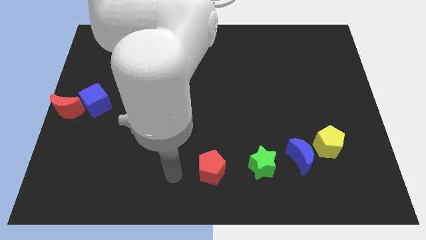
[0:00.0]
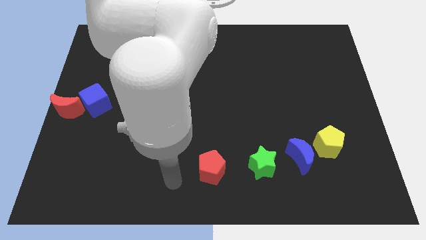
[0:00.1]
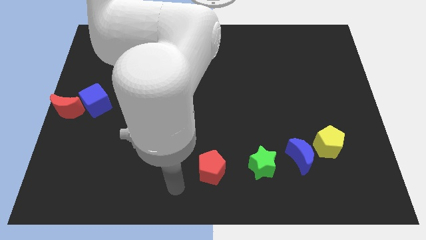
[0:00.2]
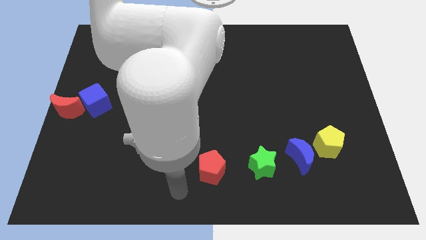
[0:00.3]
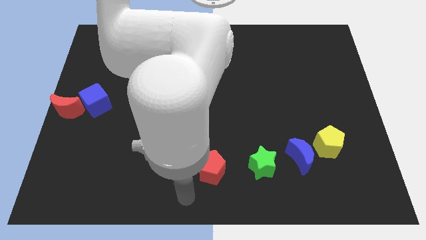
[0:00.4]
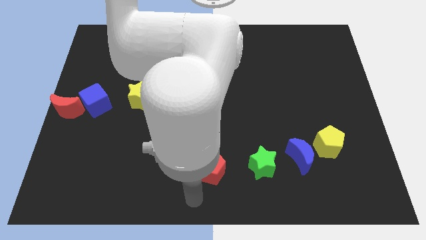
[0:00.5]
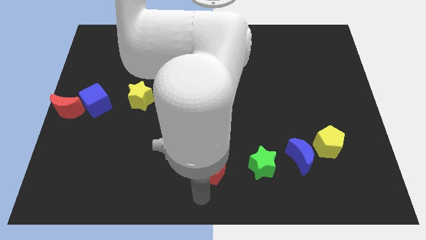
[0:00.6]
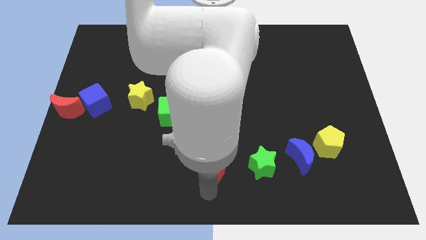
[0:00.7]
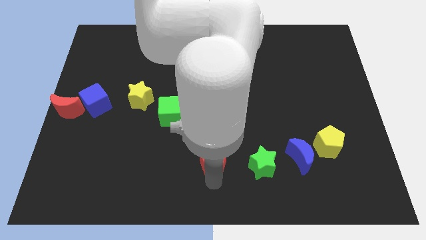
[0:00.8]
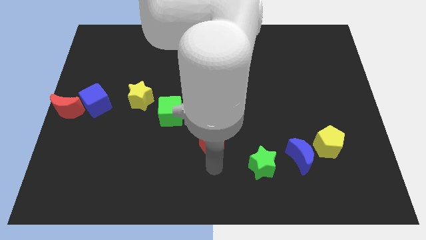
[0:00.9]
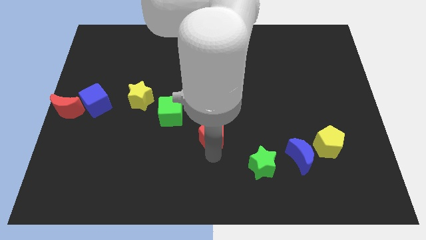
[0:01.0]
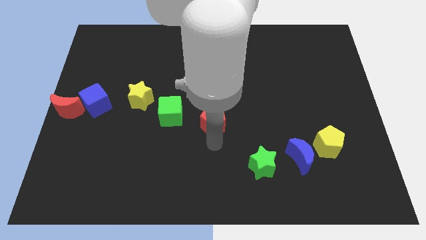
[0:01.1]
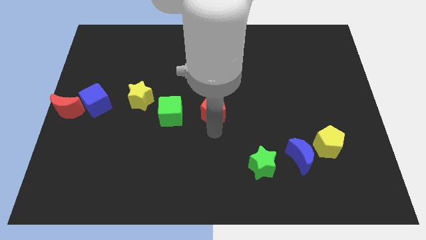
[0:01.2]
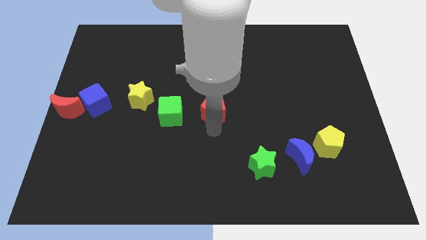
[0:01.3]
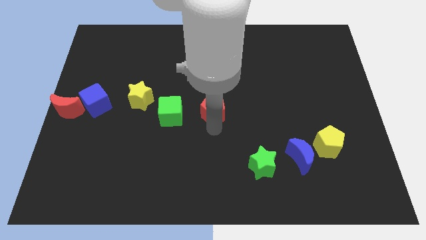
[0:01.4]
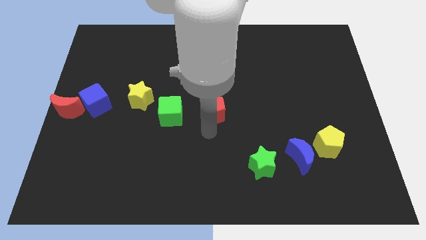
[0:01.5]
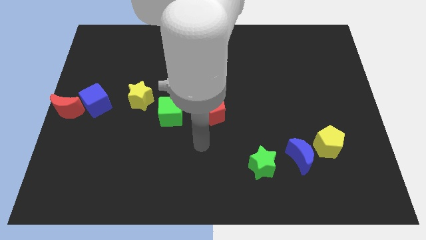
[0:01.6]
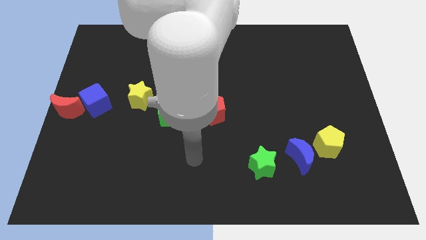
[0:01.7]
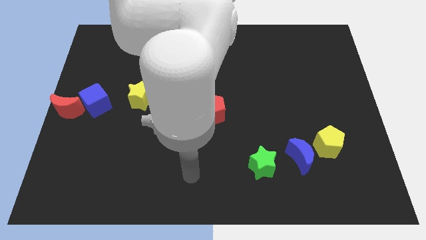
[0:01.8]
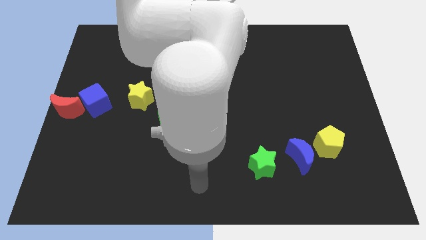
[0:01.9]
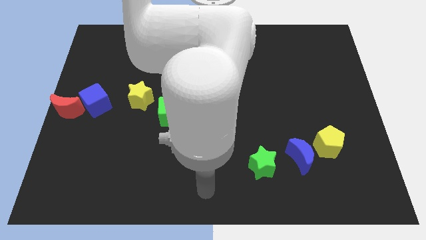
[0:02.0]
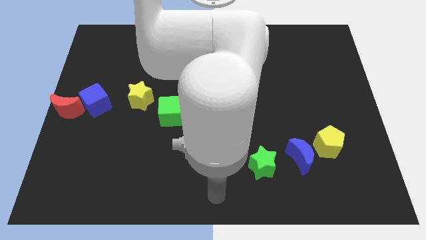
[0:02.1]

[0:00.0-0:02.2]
move red pentagon towards center

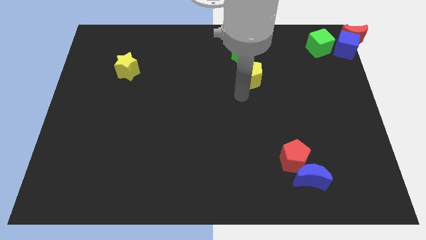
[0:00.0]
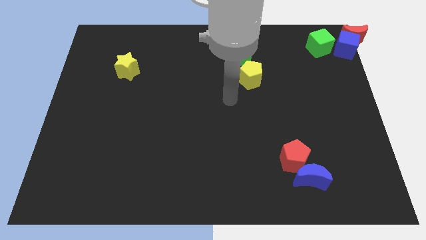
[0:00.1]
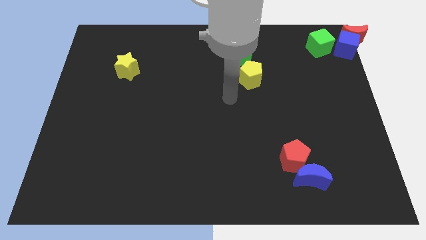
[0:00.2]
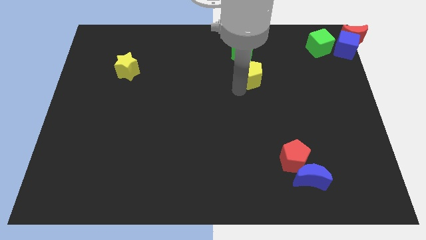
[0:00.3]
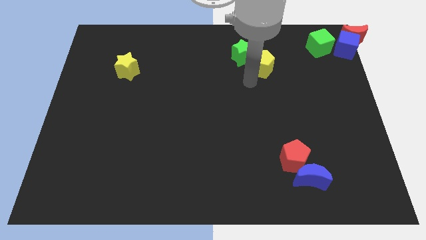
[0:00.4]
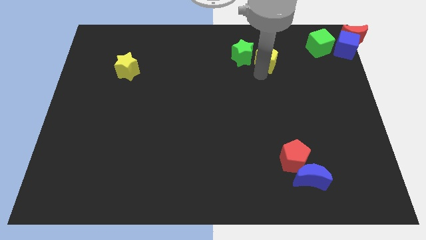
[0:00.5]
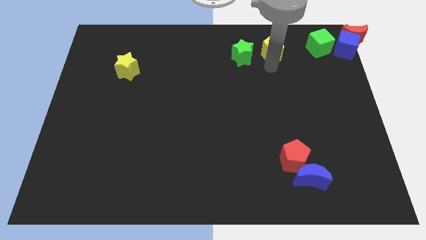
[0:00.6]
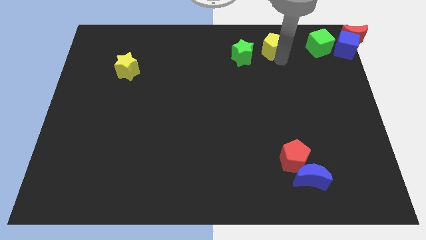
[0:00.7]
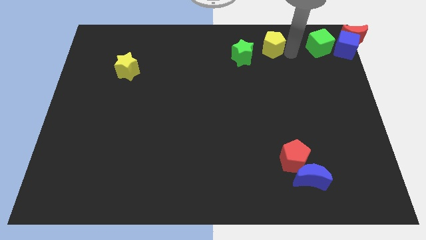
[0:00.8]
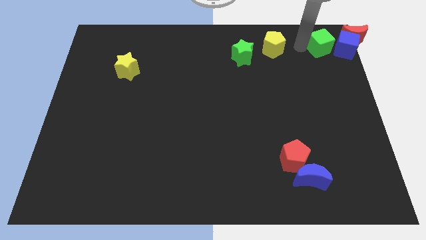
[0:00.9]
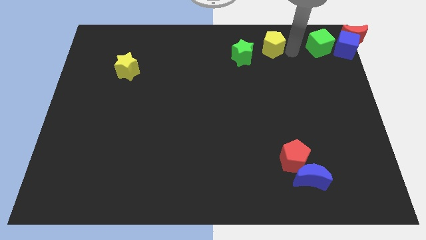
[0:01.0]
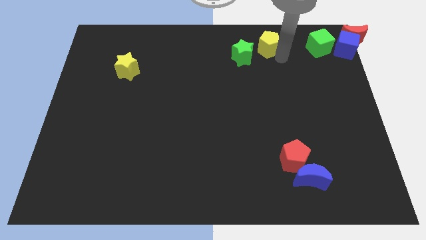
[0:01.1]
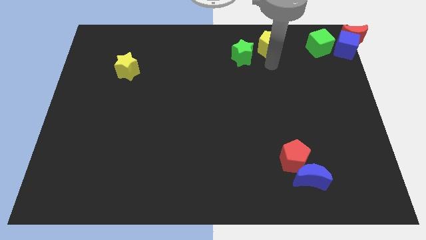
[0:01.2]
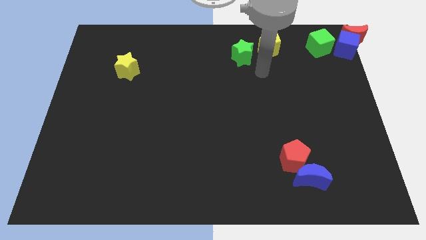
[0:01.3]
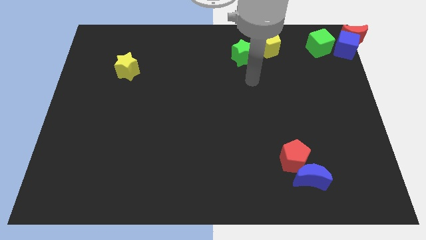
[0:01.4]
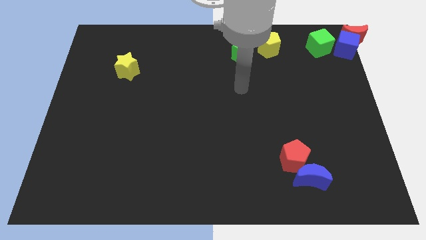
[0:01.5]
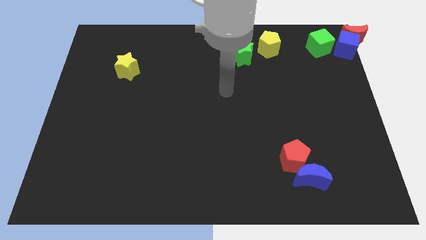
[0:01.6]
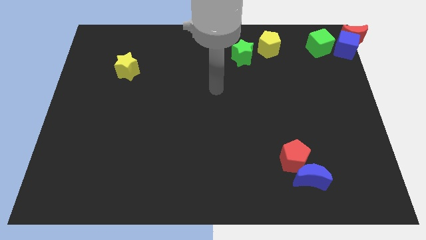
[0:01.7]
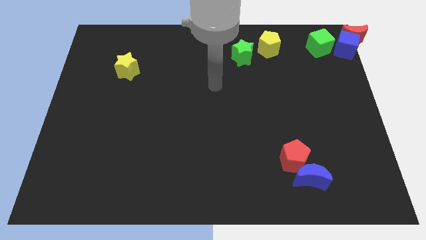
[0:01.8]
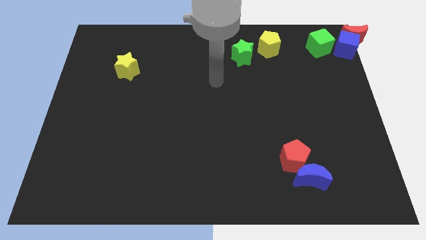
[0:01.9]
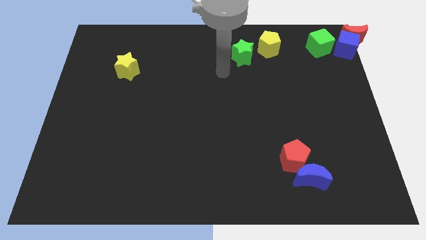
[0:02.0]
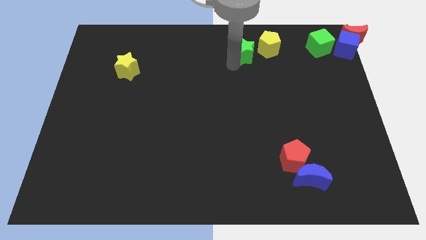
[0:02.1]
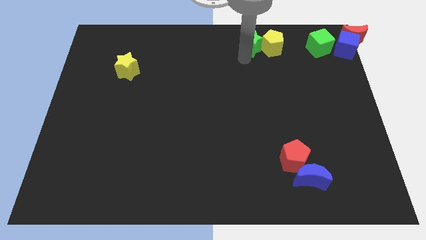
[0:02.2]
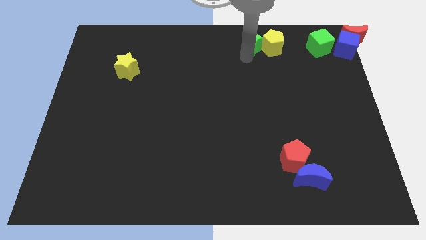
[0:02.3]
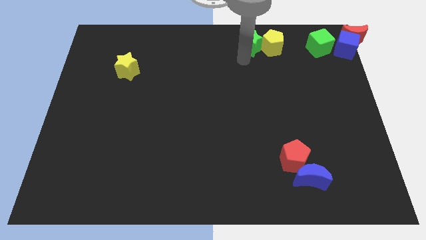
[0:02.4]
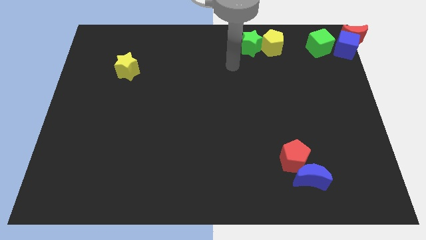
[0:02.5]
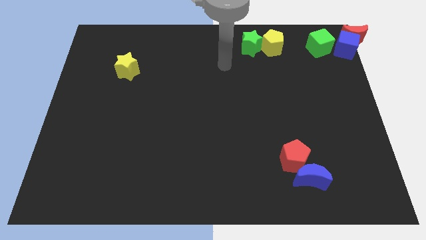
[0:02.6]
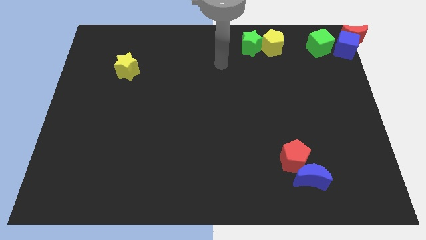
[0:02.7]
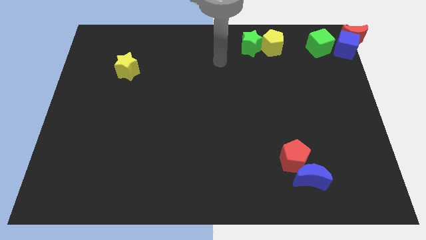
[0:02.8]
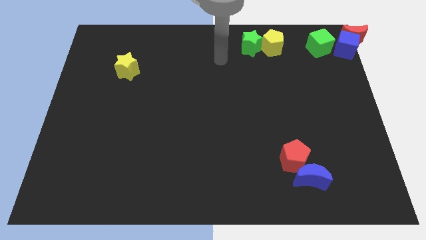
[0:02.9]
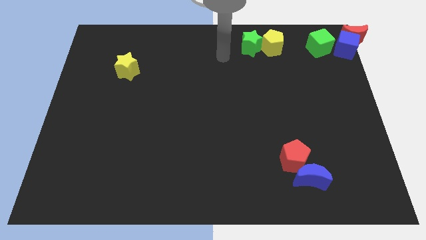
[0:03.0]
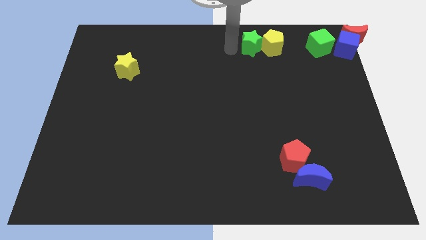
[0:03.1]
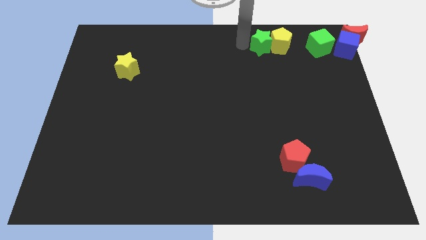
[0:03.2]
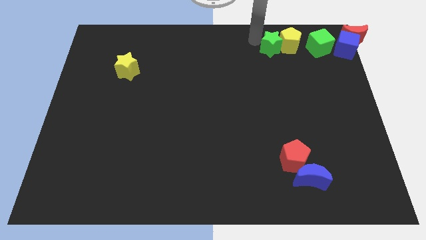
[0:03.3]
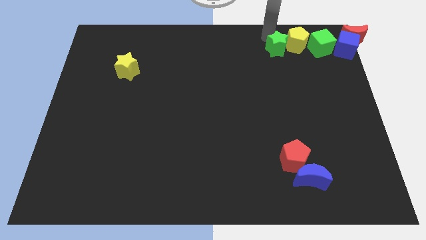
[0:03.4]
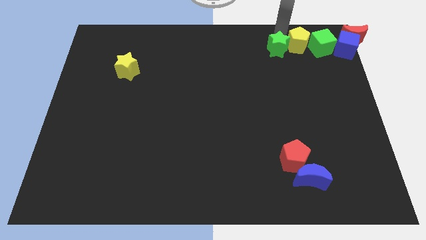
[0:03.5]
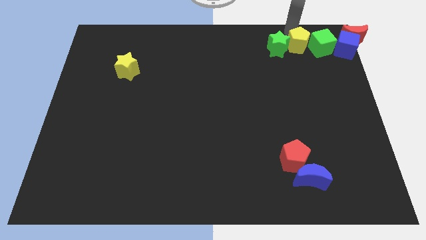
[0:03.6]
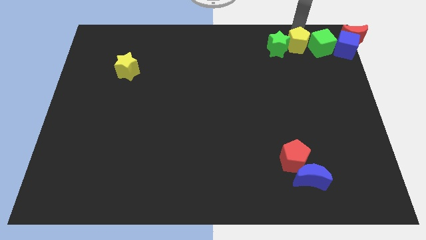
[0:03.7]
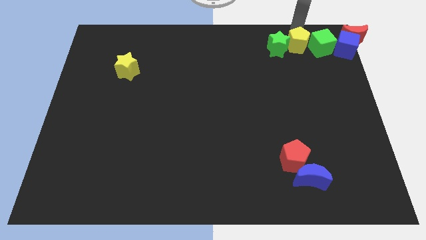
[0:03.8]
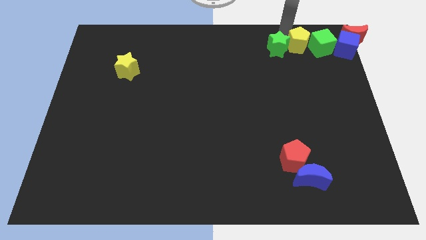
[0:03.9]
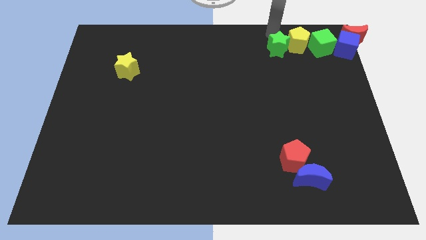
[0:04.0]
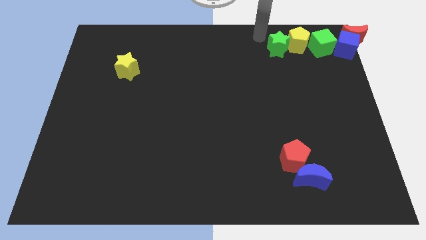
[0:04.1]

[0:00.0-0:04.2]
move the yellow pentagon close to the green star

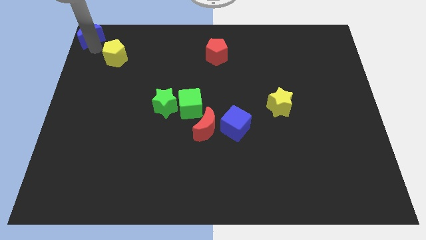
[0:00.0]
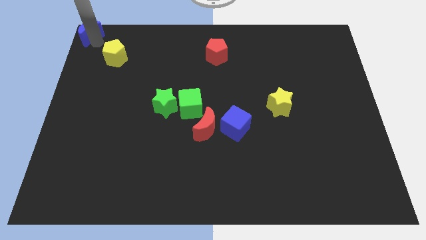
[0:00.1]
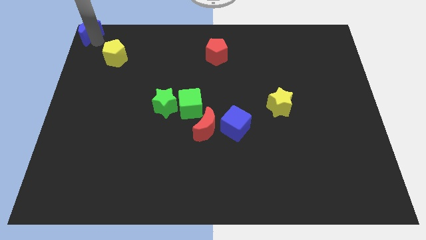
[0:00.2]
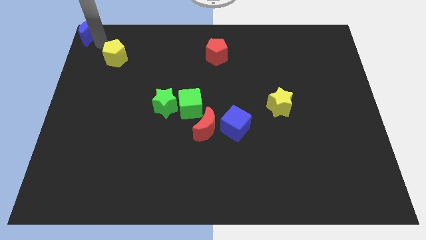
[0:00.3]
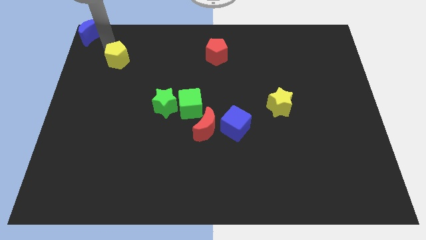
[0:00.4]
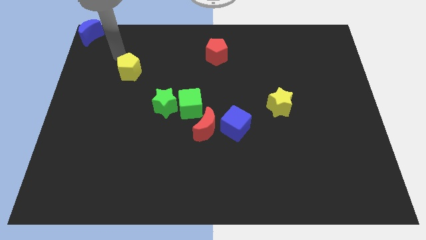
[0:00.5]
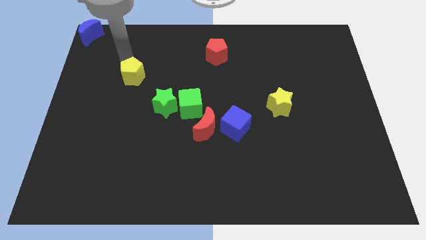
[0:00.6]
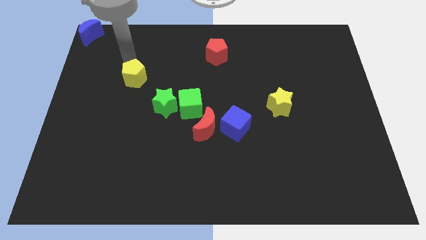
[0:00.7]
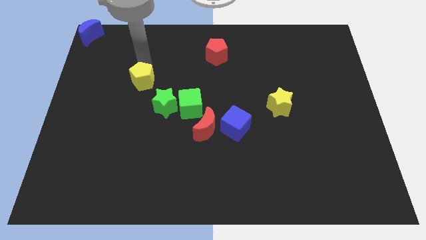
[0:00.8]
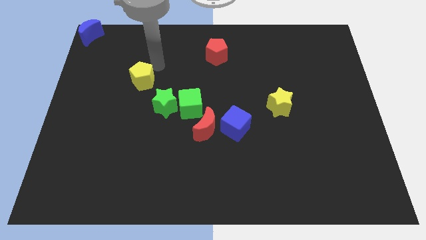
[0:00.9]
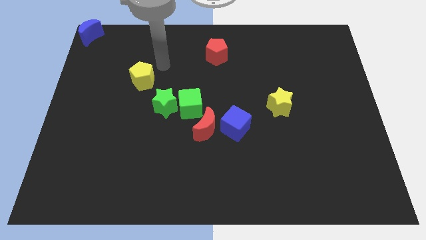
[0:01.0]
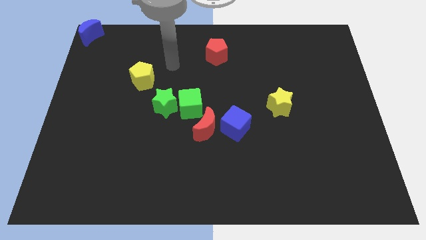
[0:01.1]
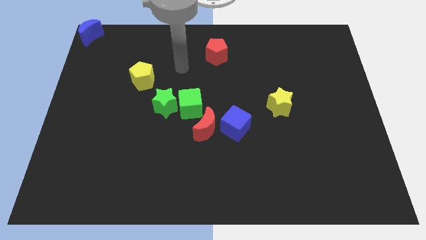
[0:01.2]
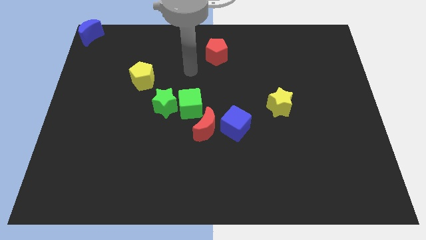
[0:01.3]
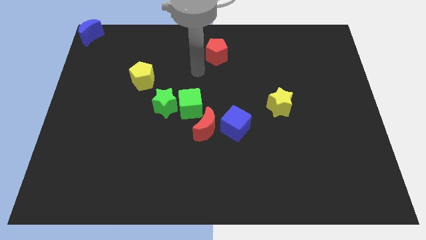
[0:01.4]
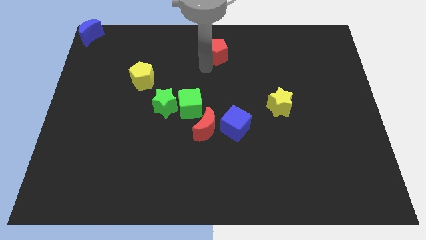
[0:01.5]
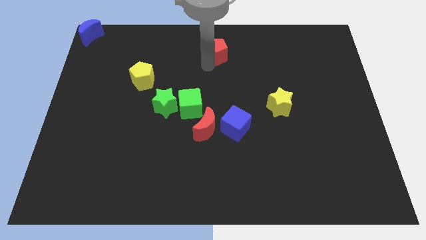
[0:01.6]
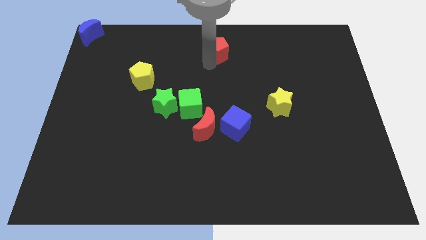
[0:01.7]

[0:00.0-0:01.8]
place the yellow pentagon diagonal to the green star

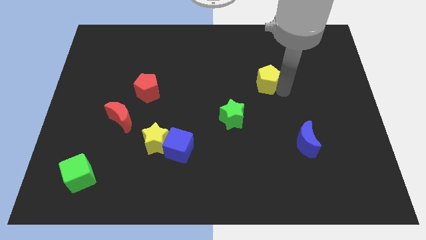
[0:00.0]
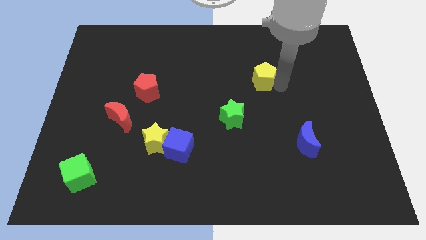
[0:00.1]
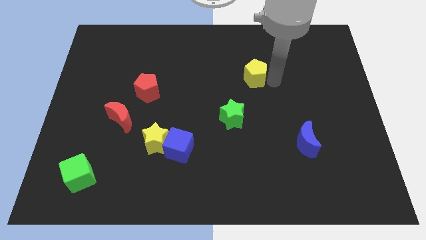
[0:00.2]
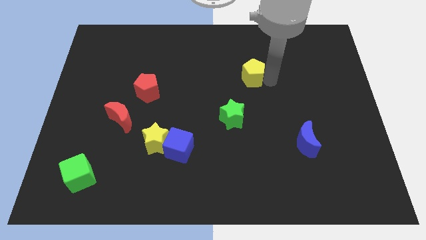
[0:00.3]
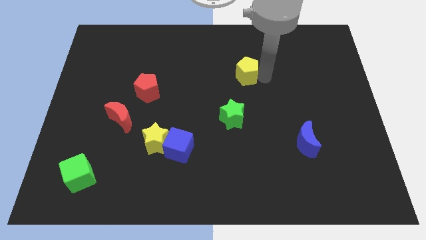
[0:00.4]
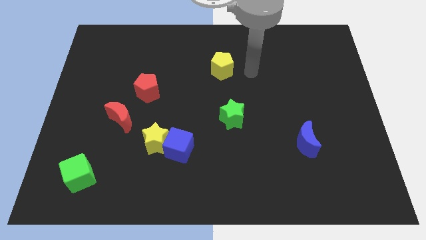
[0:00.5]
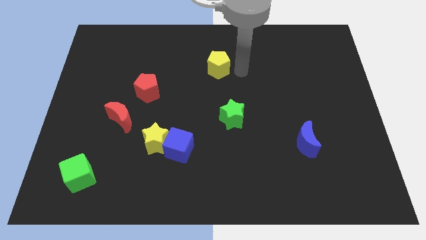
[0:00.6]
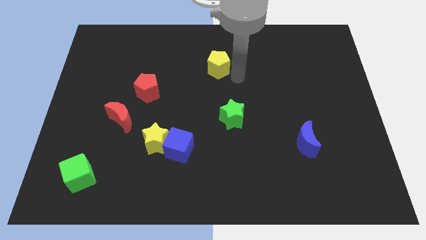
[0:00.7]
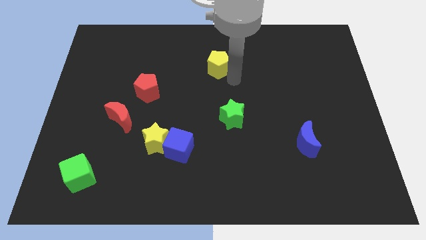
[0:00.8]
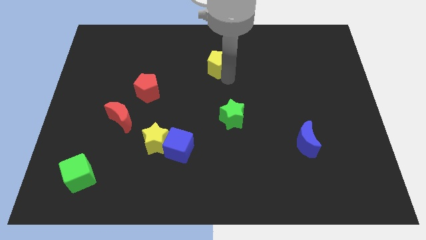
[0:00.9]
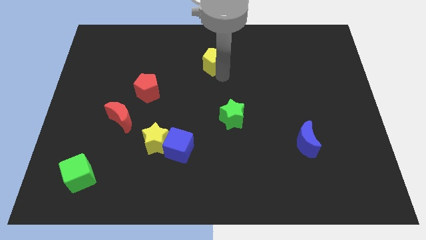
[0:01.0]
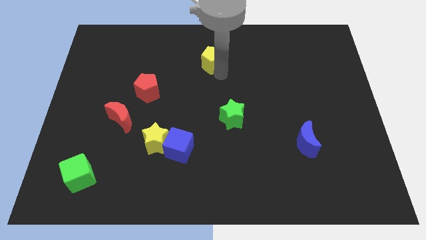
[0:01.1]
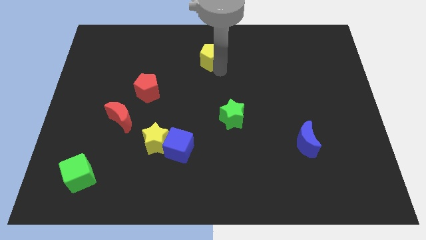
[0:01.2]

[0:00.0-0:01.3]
move the yellow pentagon towards the top center of the board
